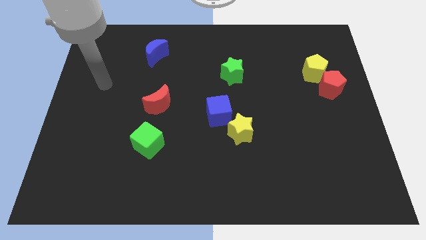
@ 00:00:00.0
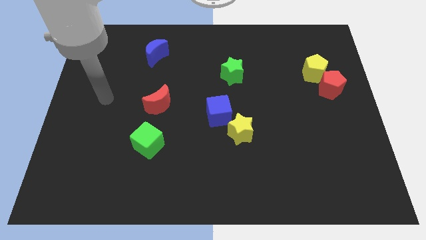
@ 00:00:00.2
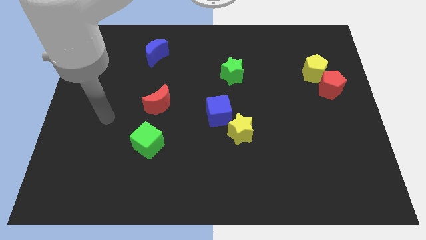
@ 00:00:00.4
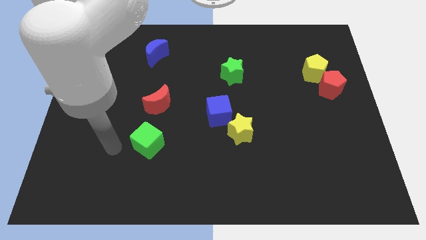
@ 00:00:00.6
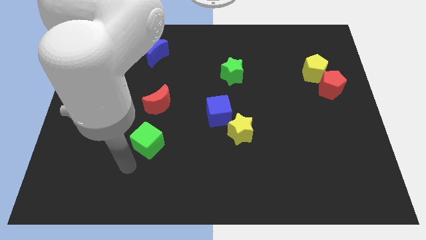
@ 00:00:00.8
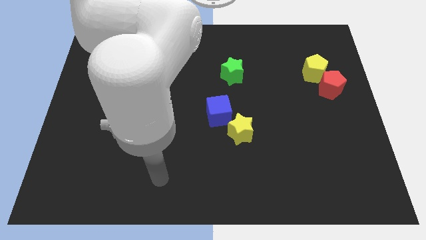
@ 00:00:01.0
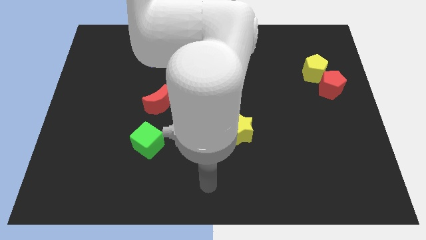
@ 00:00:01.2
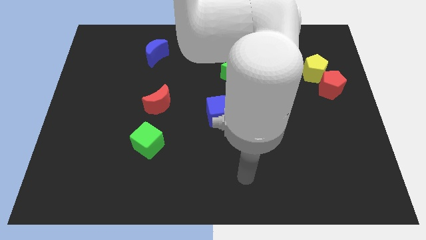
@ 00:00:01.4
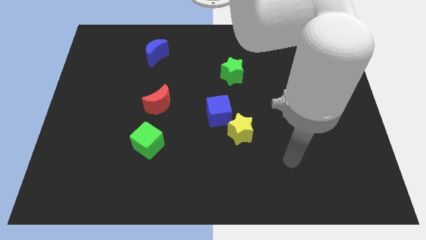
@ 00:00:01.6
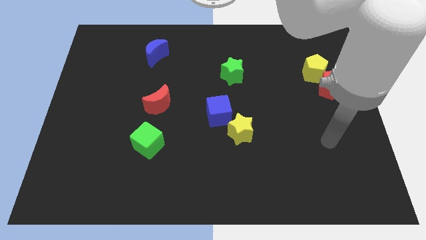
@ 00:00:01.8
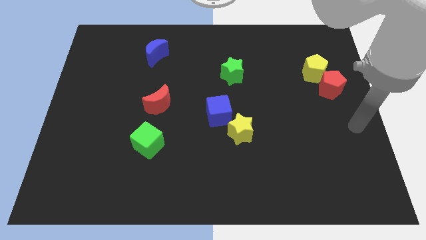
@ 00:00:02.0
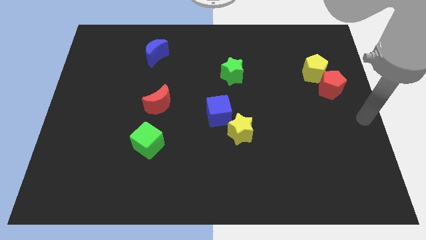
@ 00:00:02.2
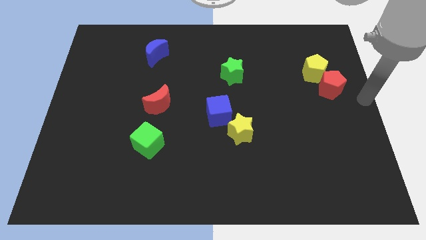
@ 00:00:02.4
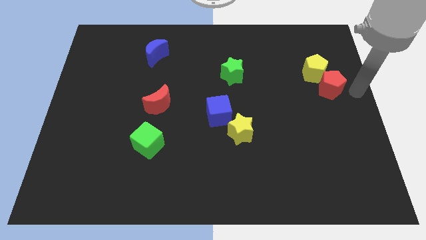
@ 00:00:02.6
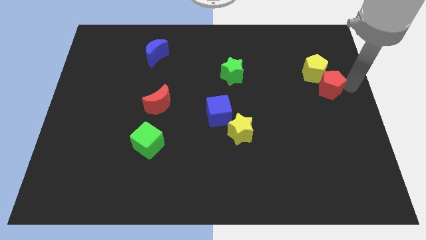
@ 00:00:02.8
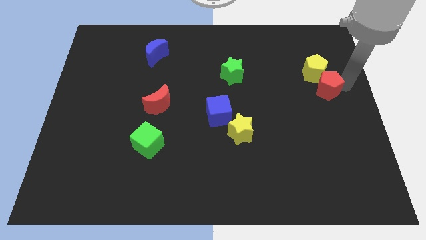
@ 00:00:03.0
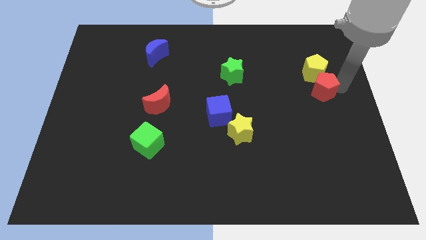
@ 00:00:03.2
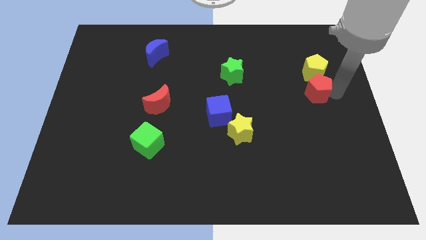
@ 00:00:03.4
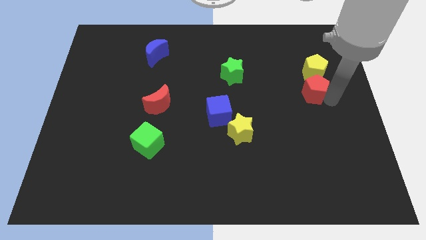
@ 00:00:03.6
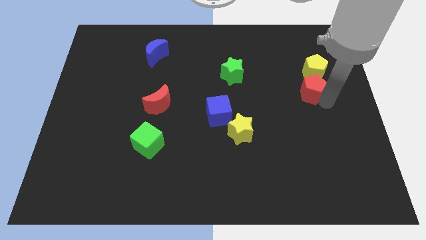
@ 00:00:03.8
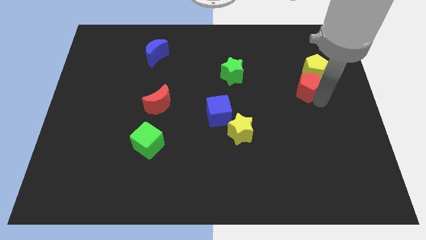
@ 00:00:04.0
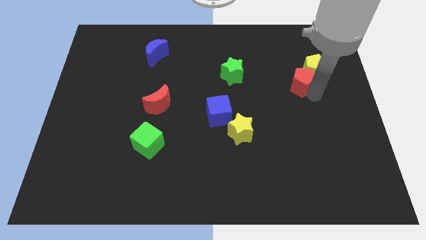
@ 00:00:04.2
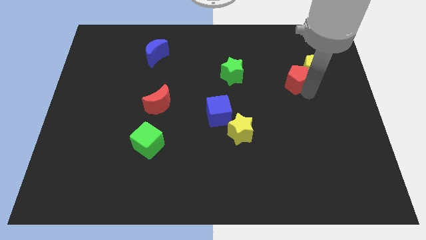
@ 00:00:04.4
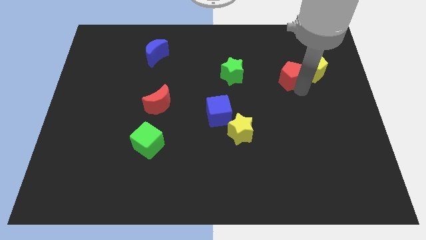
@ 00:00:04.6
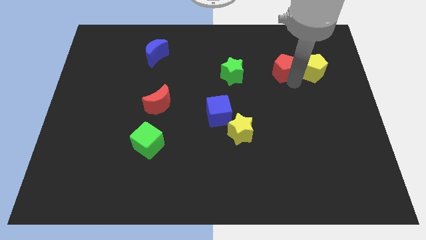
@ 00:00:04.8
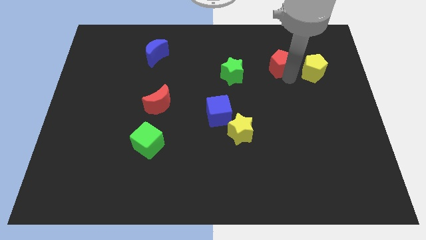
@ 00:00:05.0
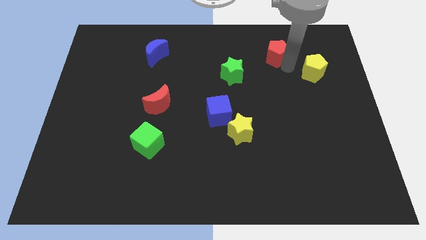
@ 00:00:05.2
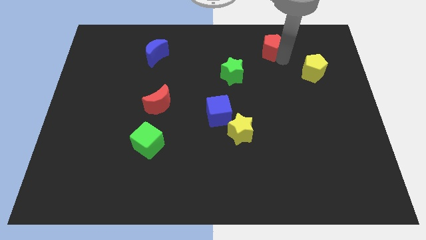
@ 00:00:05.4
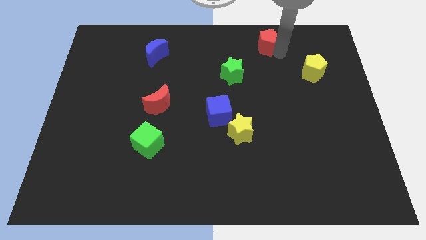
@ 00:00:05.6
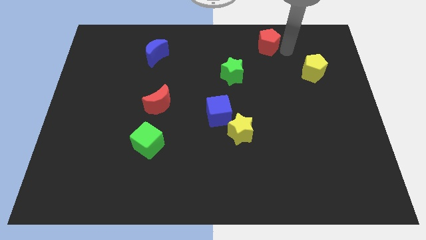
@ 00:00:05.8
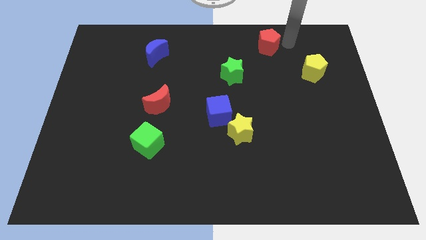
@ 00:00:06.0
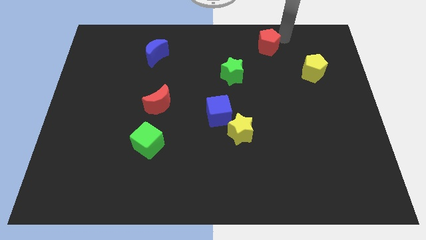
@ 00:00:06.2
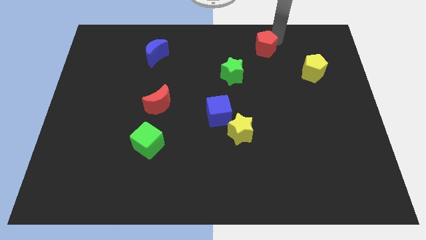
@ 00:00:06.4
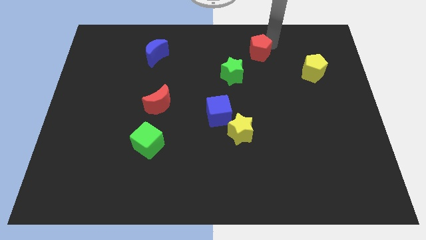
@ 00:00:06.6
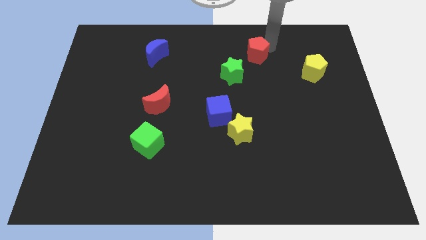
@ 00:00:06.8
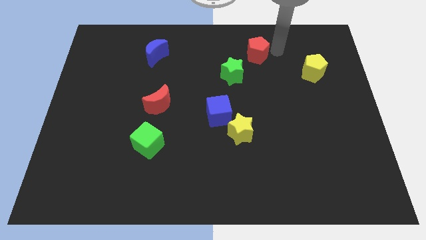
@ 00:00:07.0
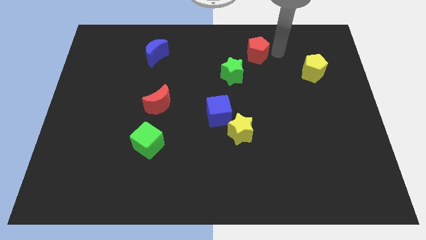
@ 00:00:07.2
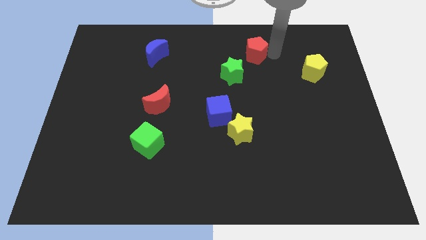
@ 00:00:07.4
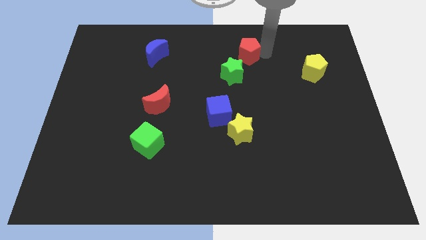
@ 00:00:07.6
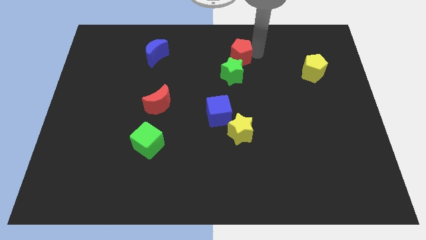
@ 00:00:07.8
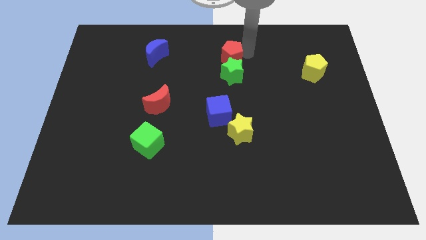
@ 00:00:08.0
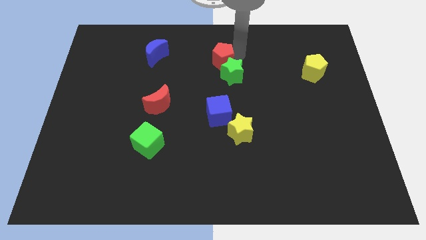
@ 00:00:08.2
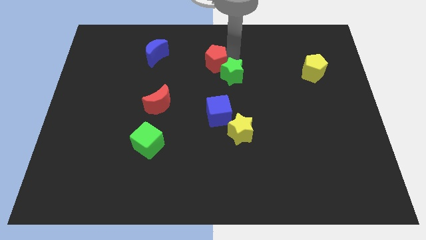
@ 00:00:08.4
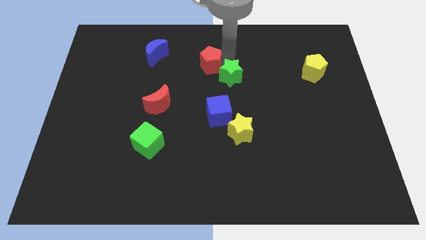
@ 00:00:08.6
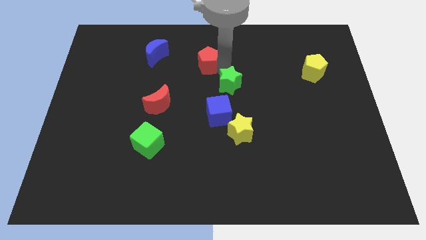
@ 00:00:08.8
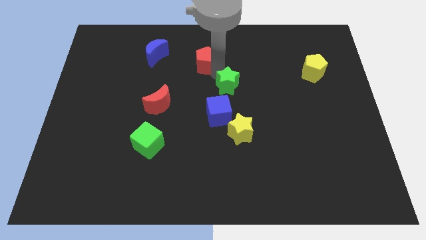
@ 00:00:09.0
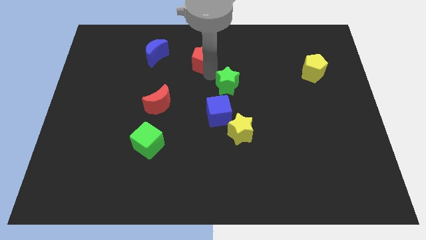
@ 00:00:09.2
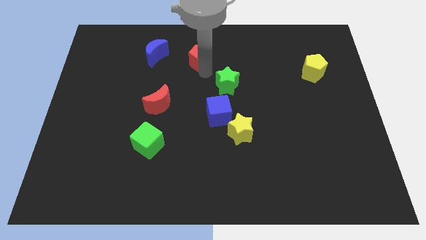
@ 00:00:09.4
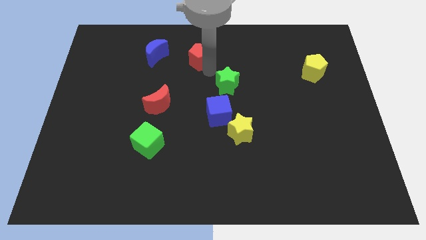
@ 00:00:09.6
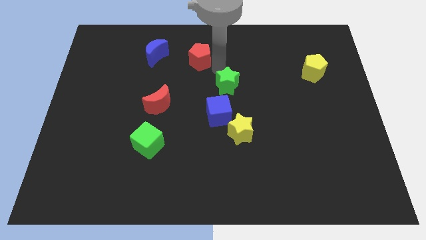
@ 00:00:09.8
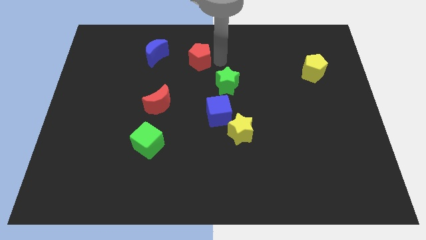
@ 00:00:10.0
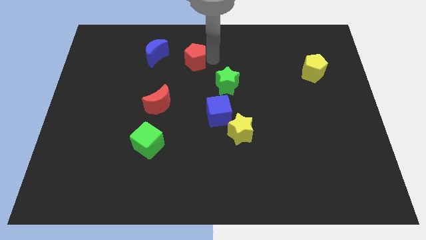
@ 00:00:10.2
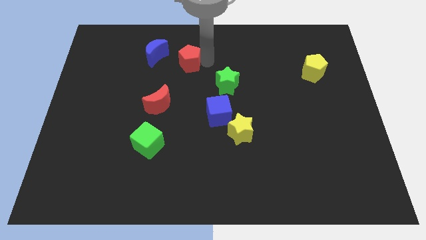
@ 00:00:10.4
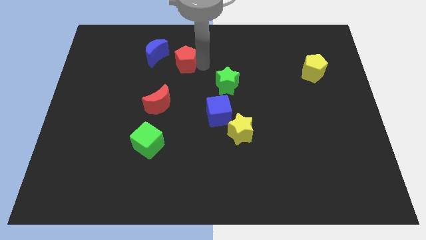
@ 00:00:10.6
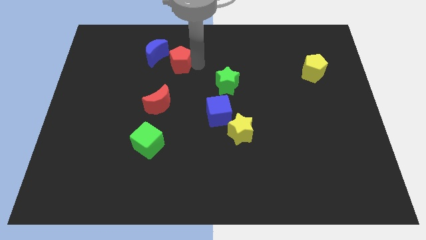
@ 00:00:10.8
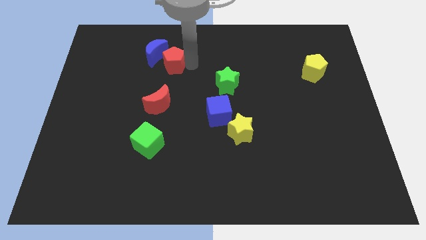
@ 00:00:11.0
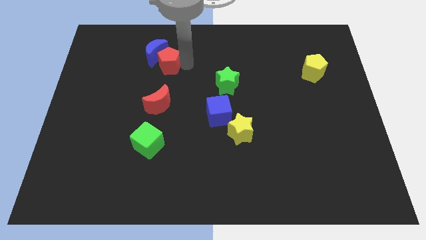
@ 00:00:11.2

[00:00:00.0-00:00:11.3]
slide the red pentagon close to the blue moon

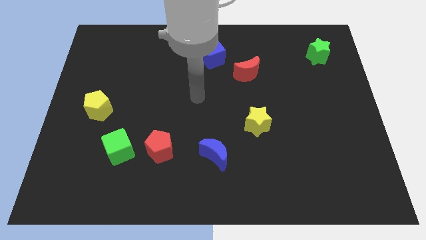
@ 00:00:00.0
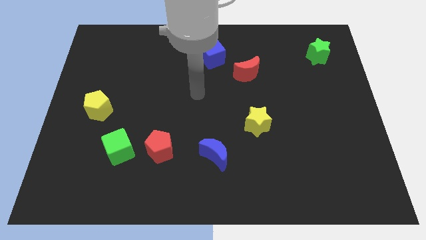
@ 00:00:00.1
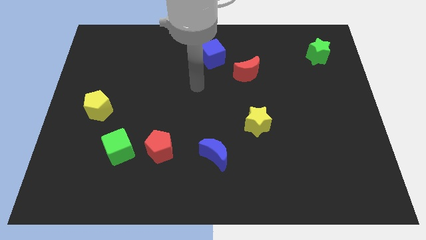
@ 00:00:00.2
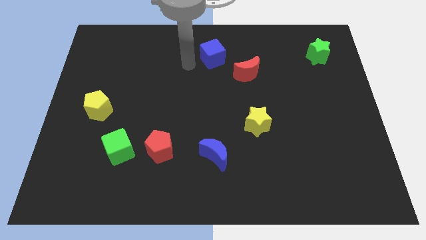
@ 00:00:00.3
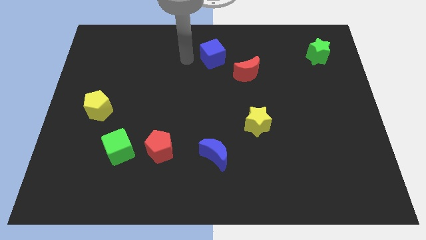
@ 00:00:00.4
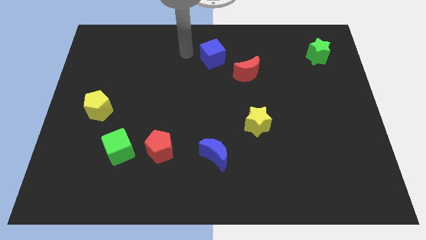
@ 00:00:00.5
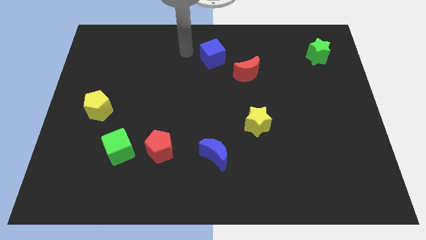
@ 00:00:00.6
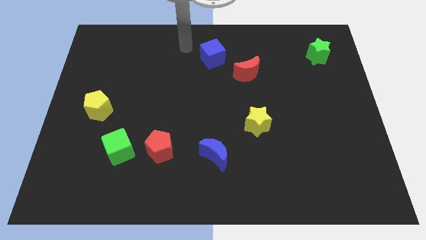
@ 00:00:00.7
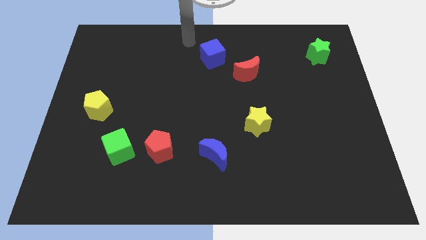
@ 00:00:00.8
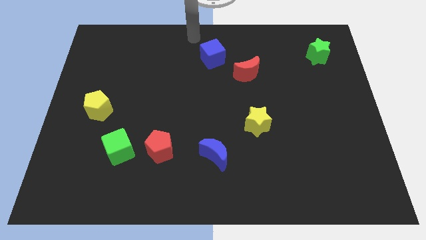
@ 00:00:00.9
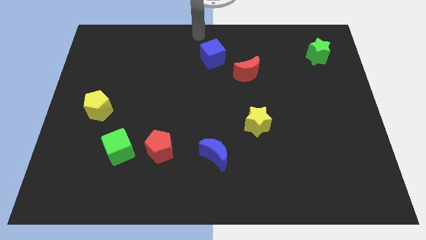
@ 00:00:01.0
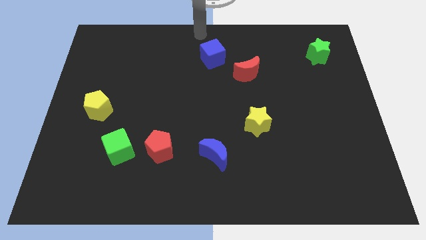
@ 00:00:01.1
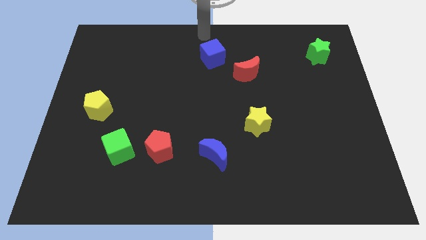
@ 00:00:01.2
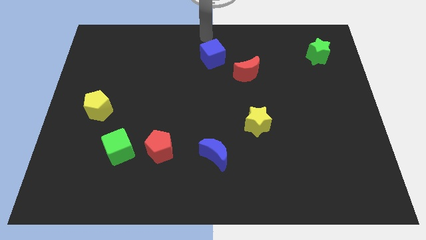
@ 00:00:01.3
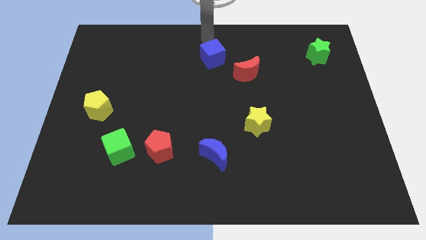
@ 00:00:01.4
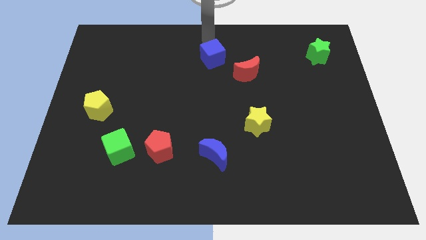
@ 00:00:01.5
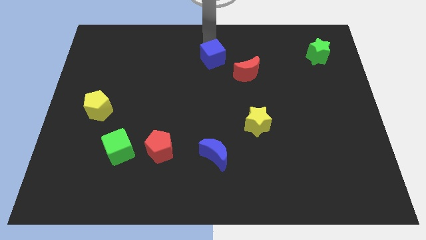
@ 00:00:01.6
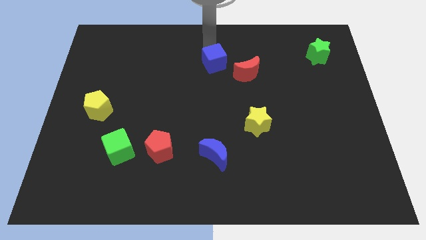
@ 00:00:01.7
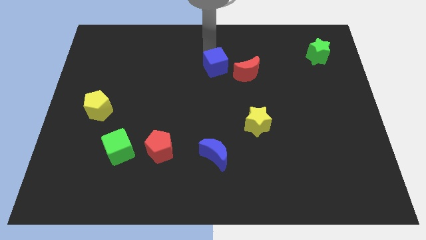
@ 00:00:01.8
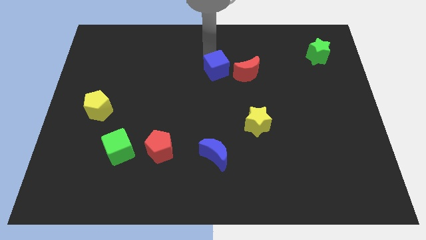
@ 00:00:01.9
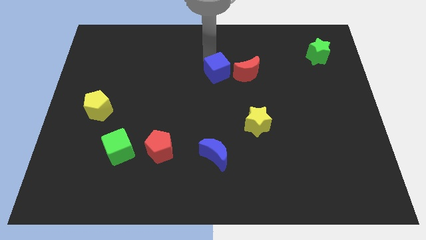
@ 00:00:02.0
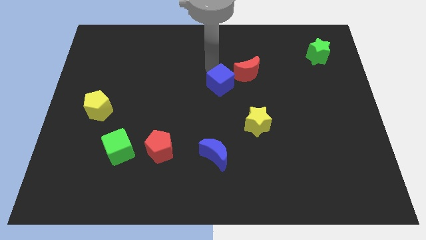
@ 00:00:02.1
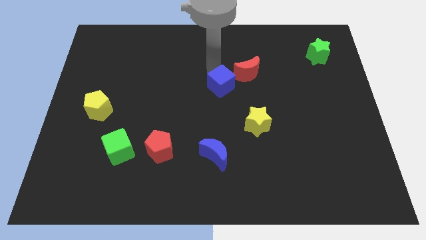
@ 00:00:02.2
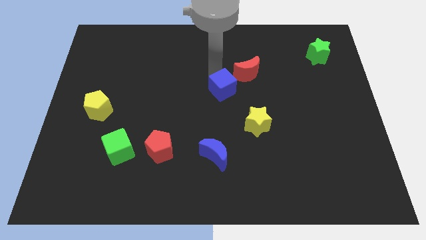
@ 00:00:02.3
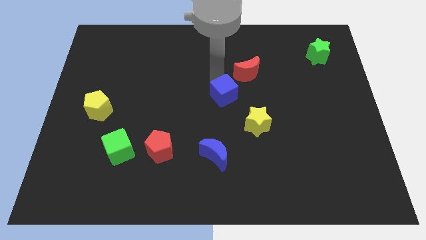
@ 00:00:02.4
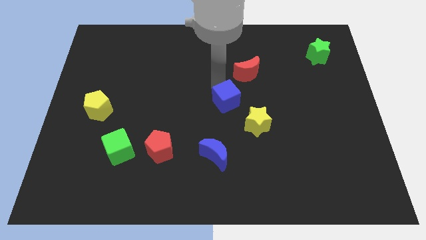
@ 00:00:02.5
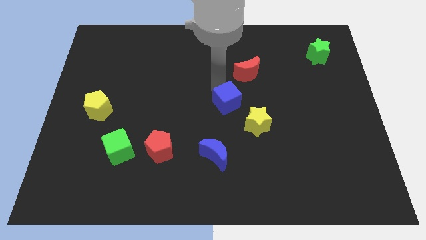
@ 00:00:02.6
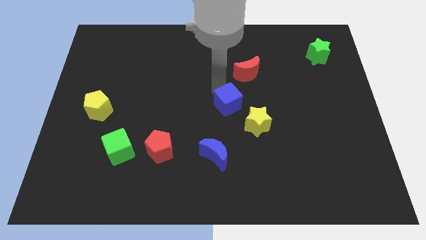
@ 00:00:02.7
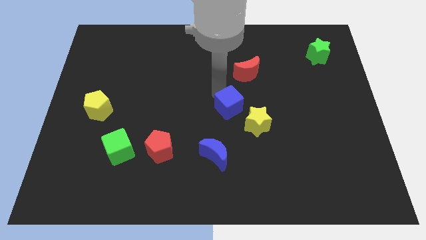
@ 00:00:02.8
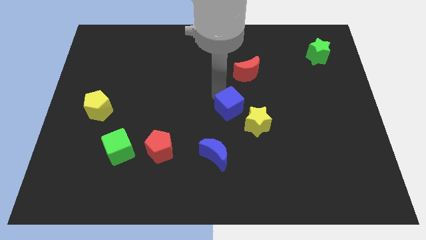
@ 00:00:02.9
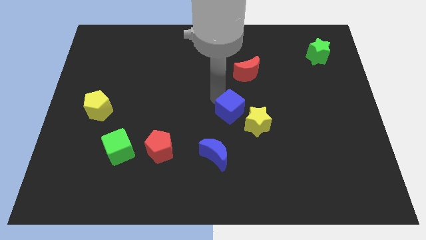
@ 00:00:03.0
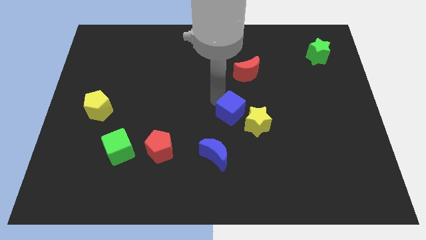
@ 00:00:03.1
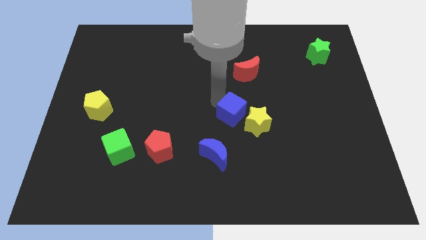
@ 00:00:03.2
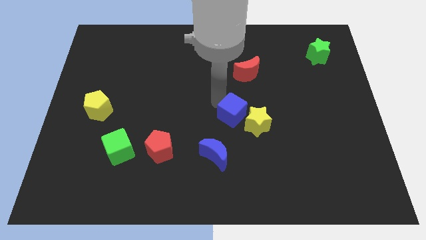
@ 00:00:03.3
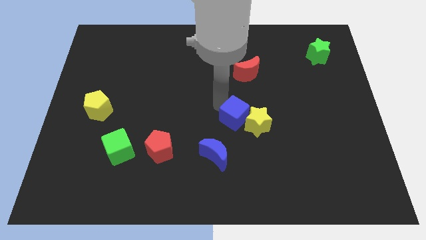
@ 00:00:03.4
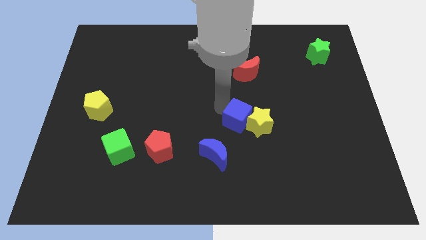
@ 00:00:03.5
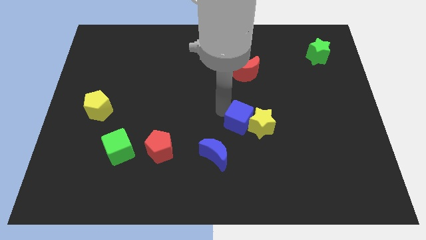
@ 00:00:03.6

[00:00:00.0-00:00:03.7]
put the blue cube close to the yellow star
